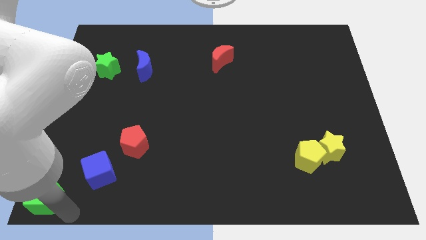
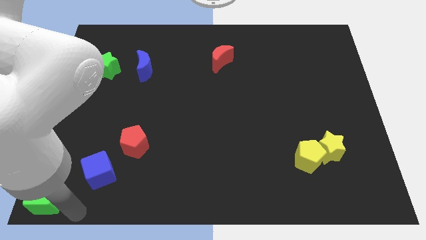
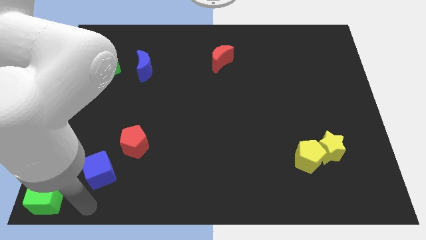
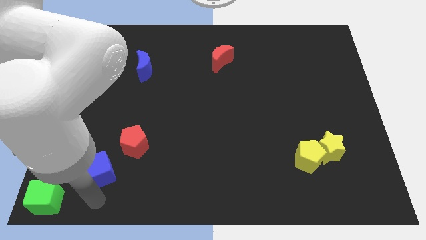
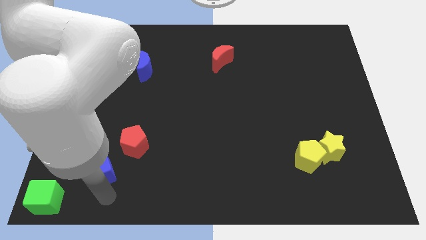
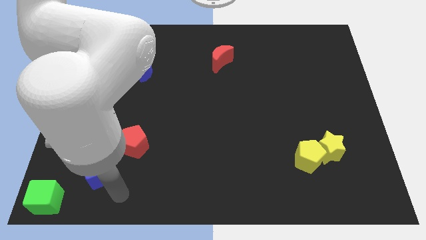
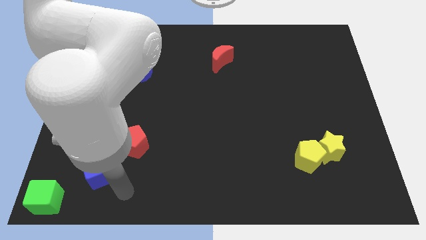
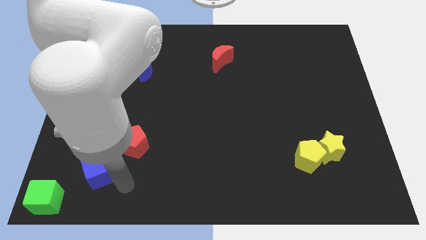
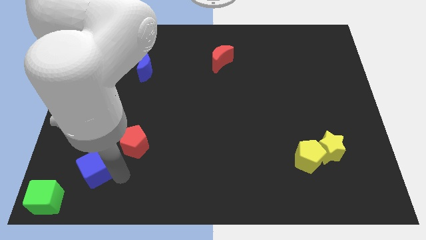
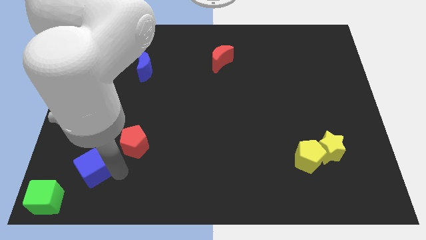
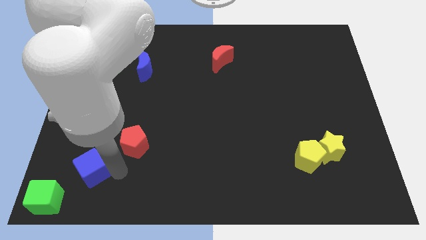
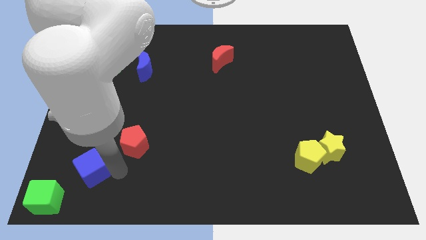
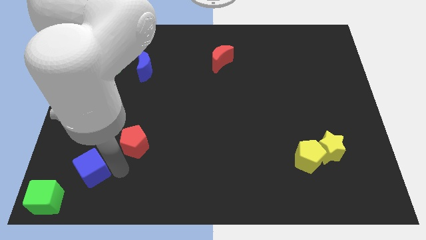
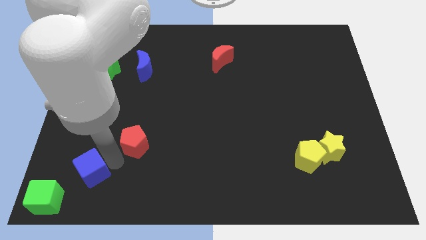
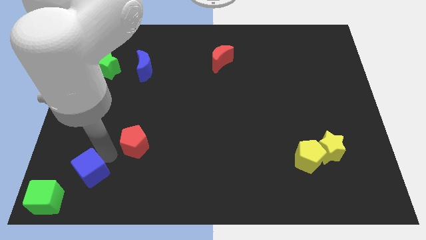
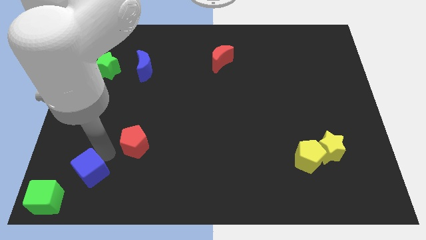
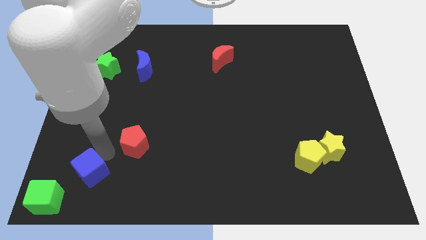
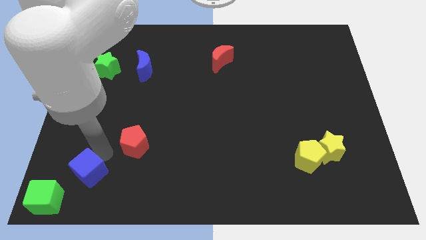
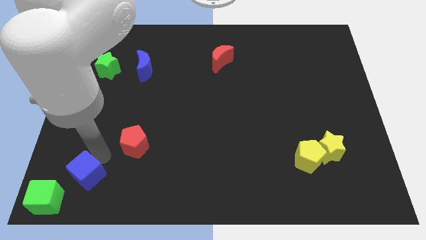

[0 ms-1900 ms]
place the blue cube diagonally in between the red pentagon and green cube

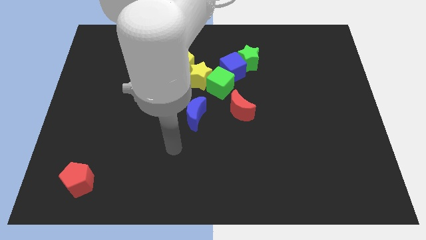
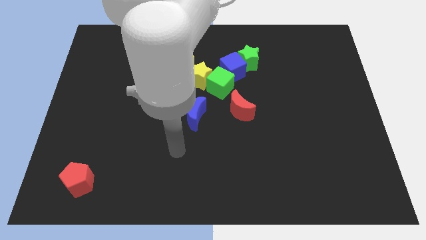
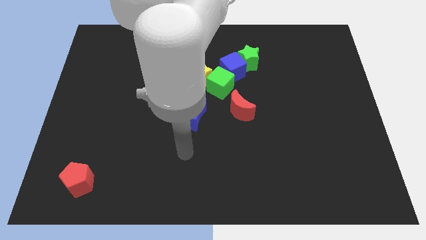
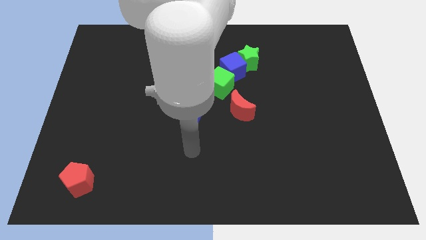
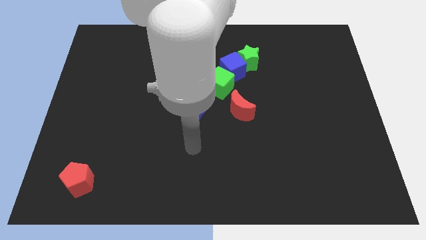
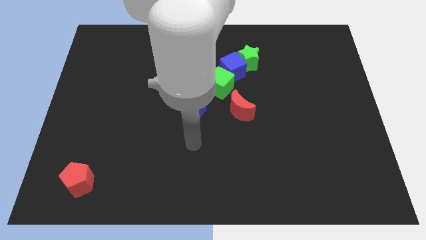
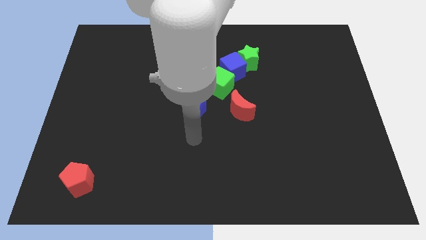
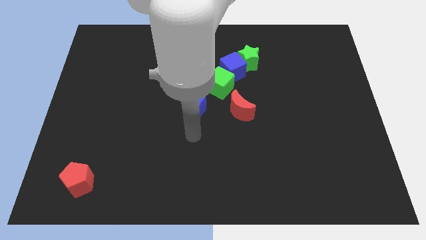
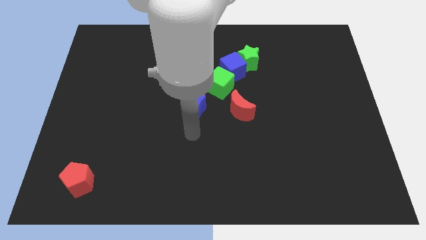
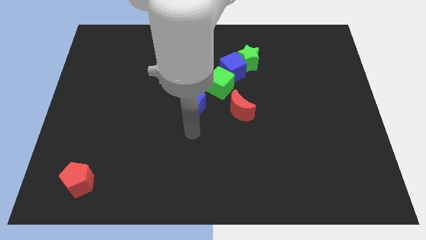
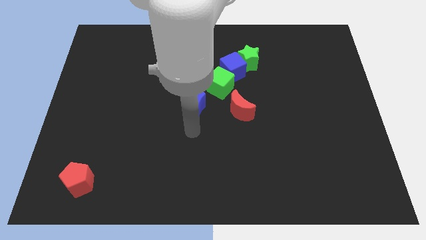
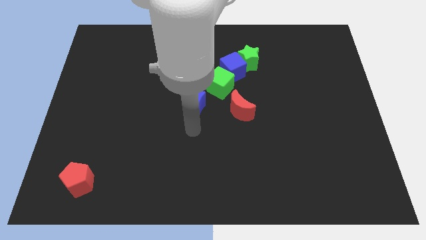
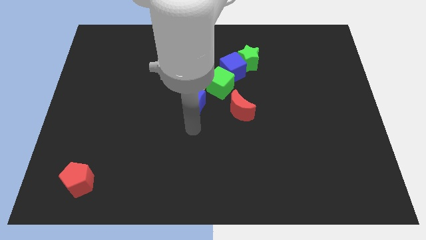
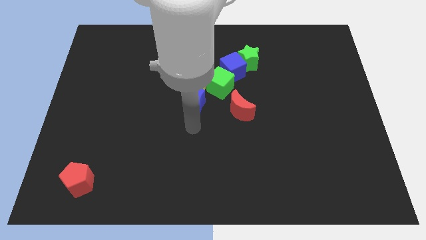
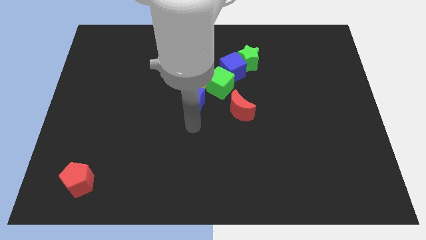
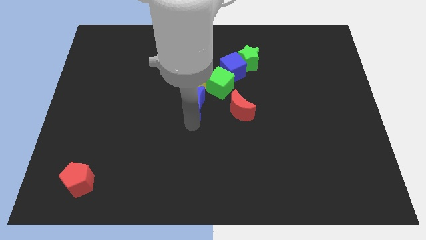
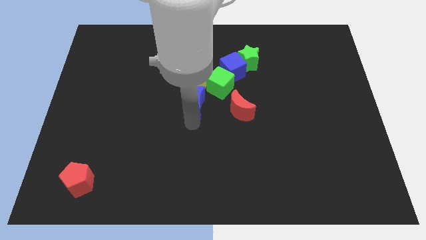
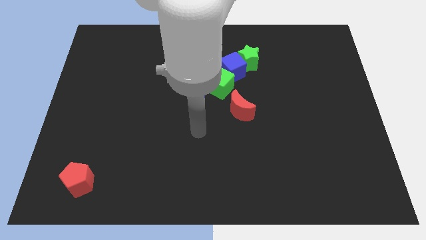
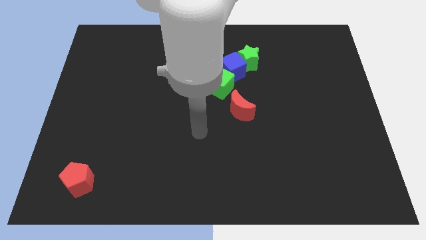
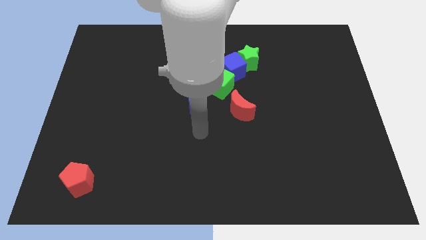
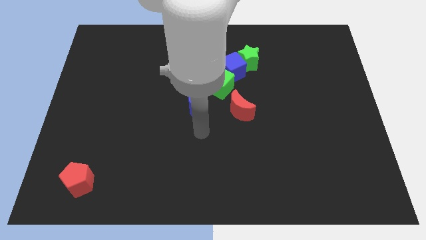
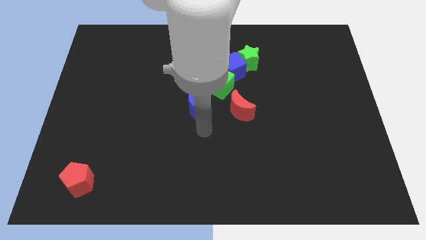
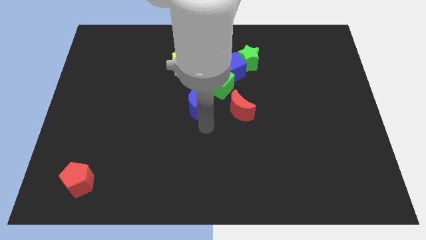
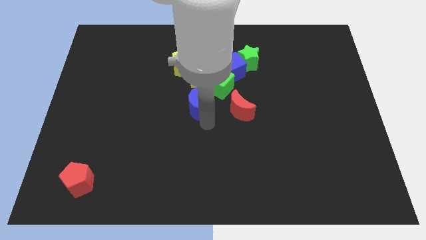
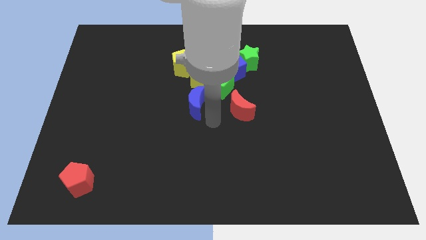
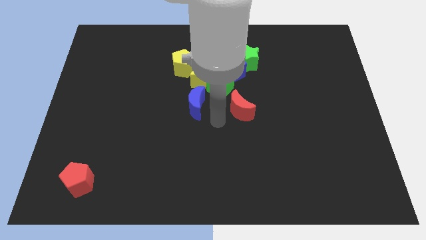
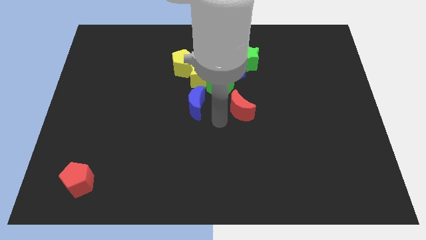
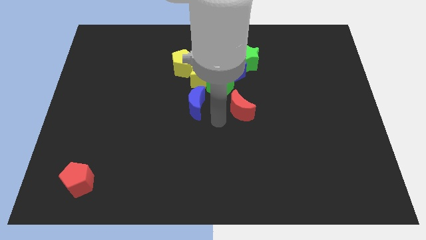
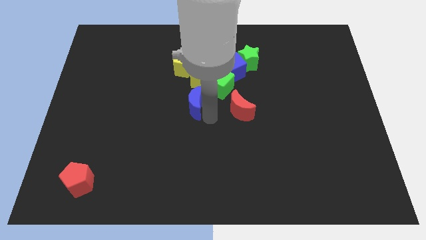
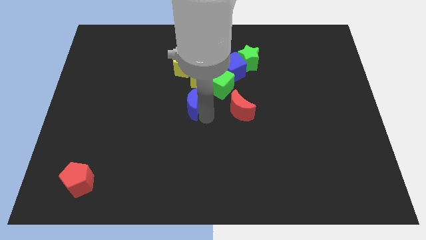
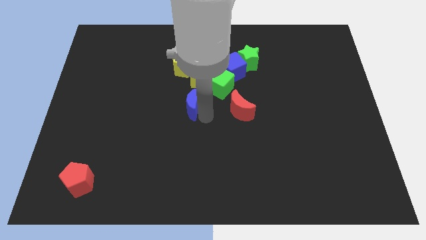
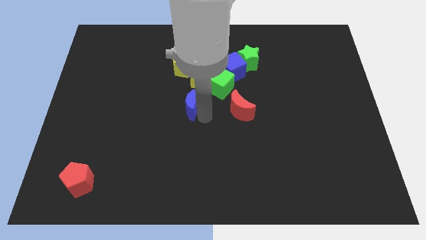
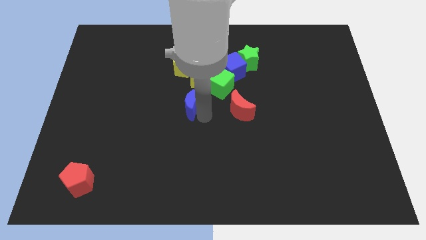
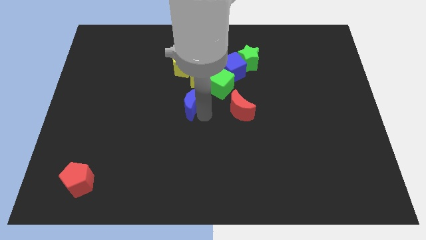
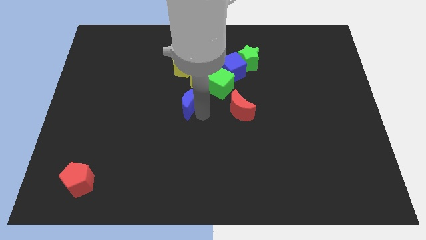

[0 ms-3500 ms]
adjust the blue crescent diagonally at the bottom left of the green cube

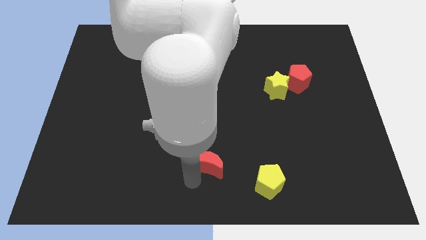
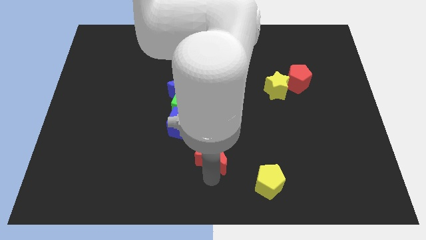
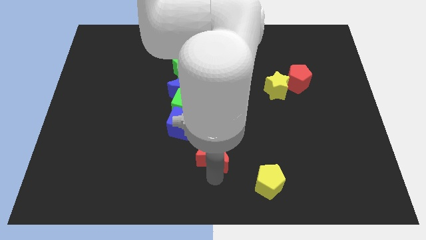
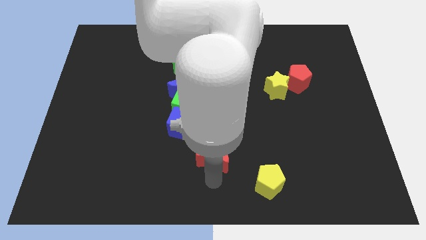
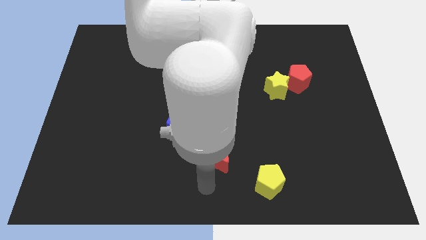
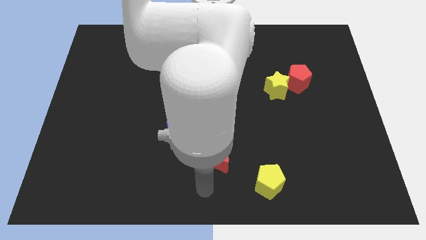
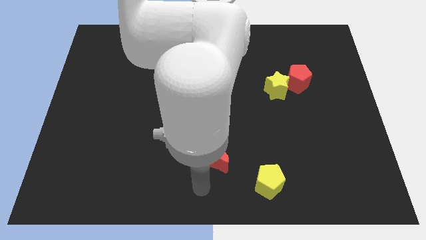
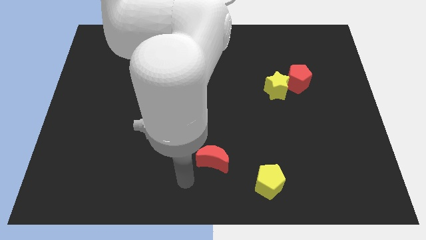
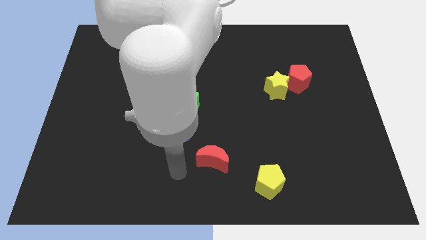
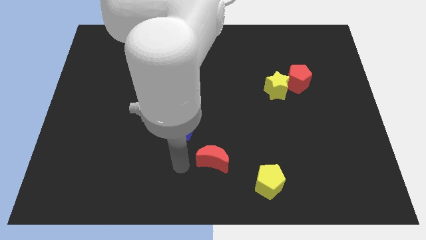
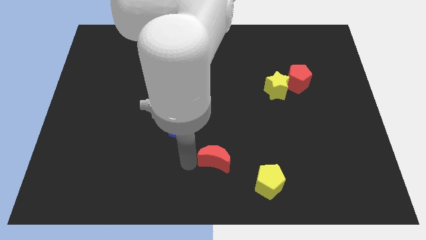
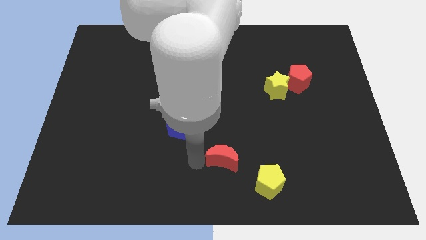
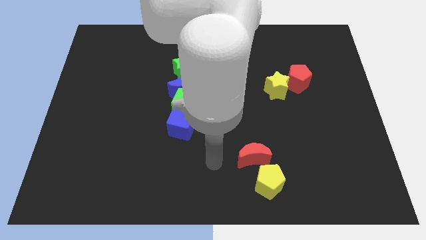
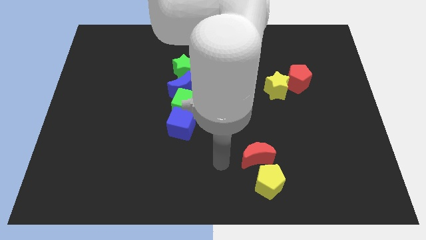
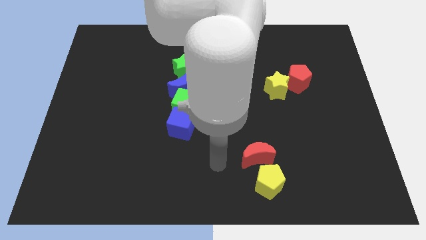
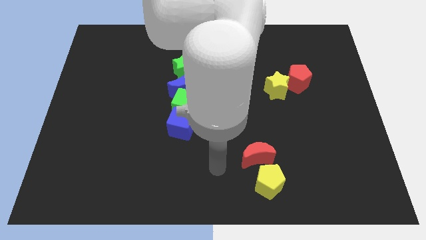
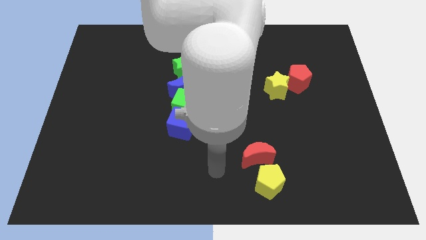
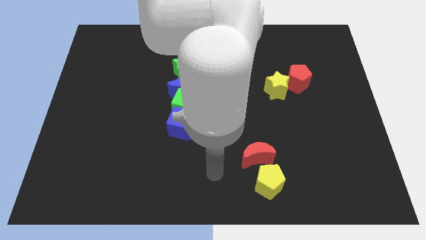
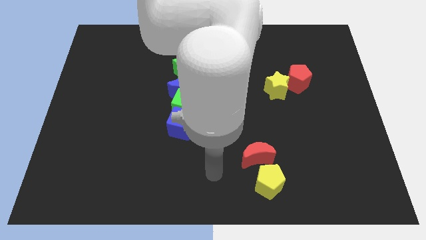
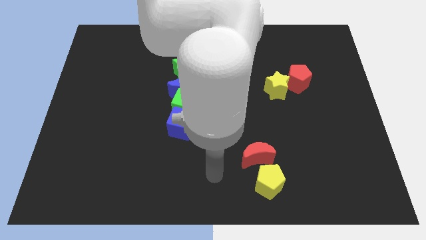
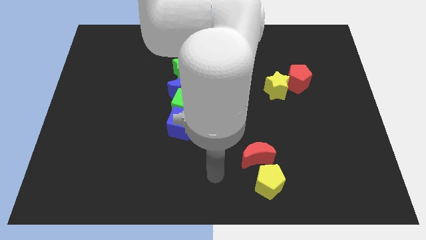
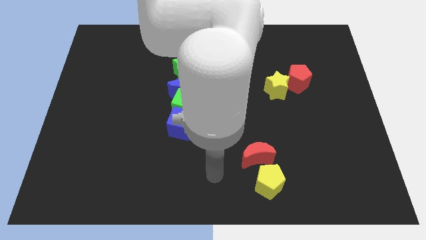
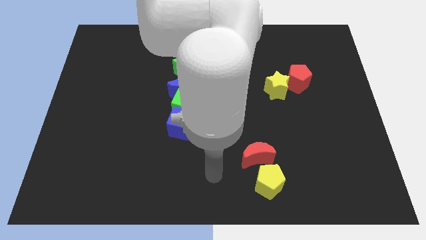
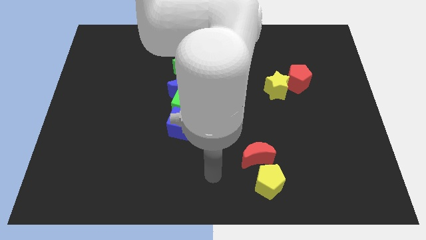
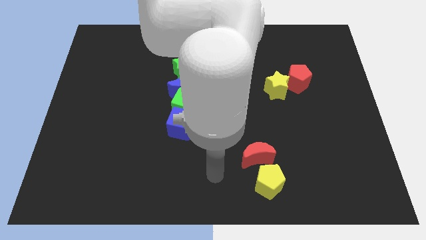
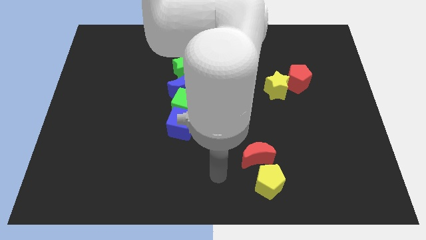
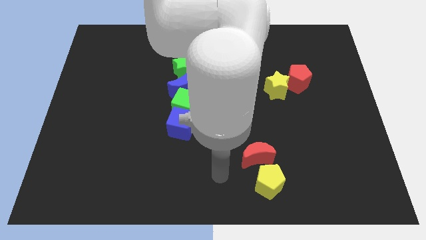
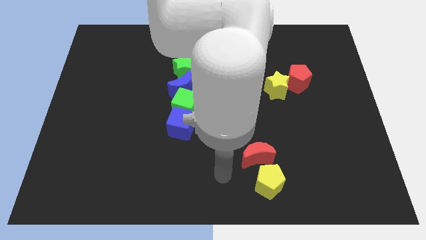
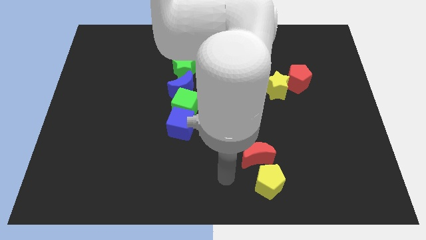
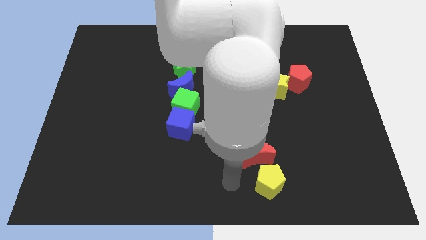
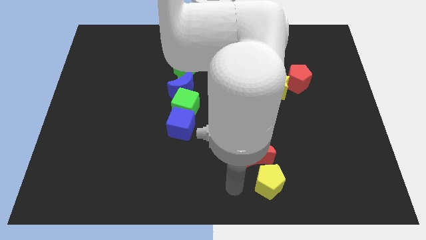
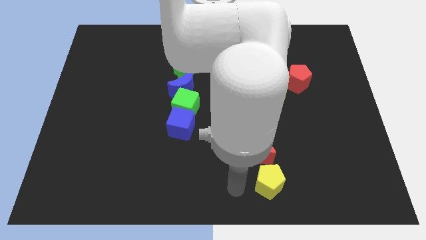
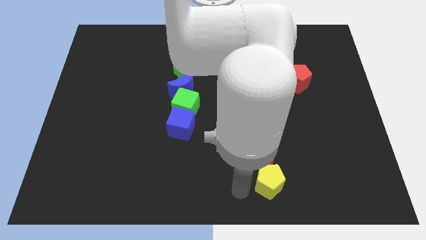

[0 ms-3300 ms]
move the red crescent close to the yellow pentagon

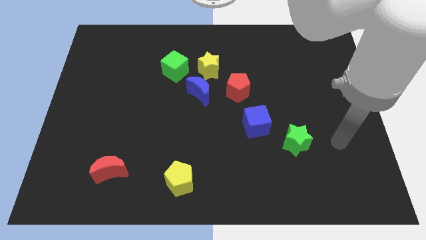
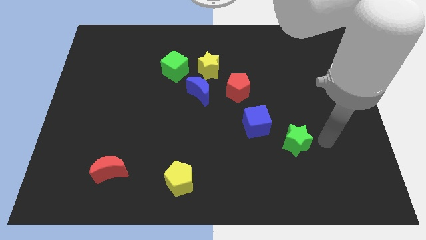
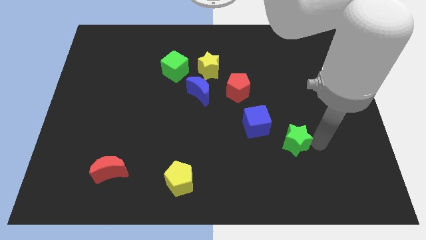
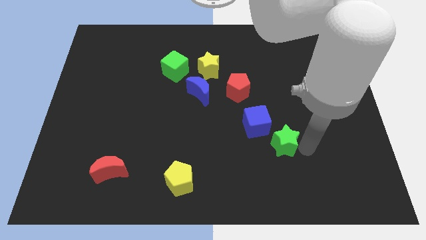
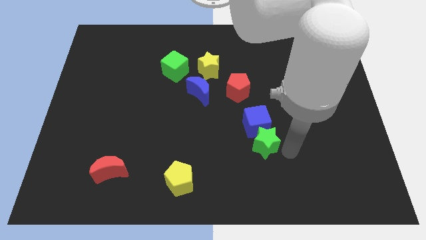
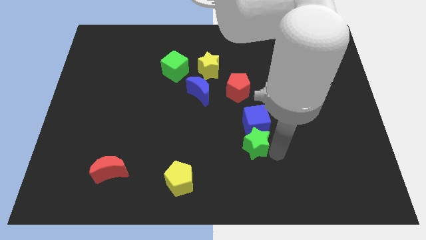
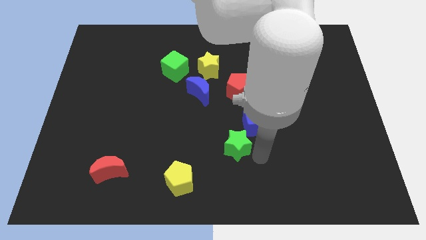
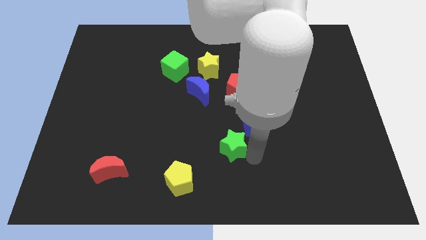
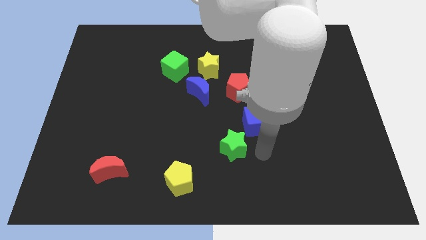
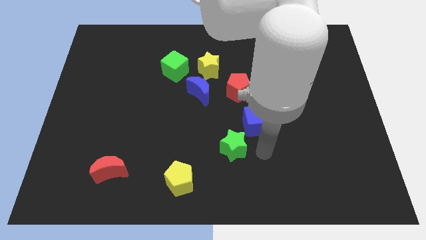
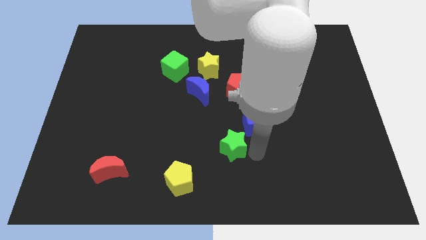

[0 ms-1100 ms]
slide the green star slightly to the left
